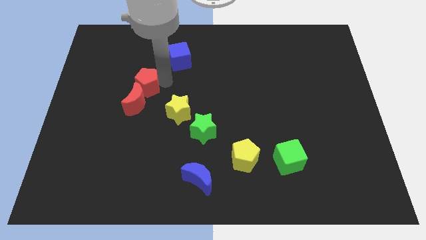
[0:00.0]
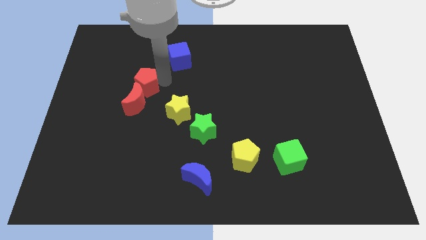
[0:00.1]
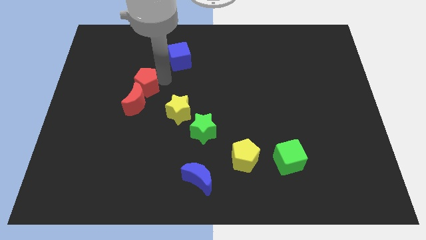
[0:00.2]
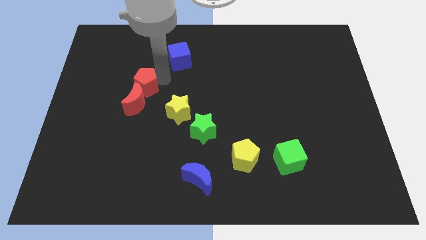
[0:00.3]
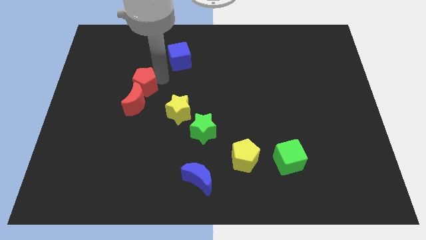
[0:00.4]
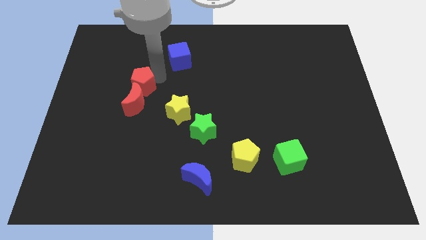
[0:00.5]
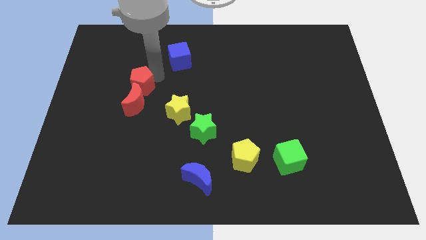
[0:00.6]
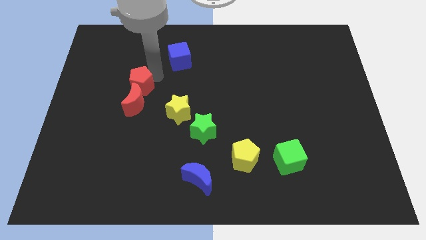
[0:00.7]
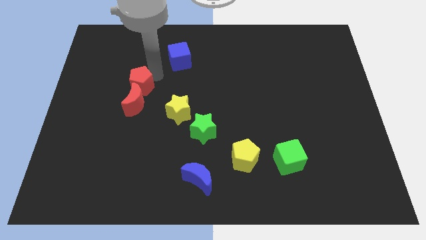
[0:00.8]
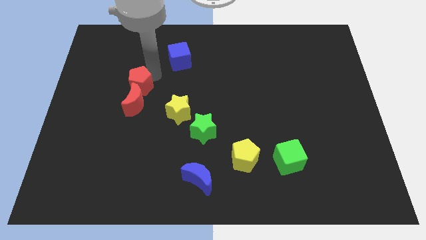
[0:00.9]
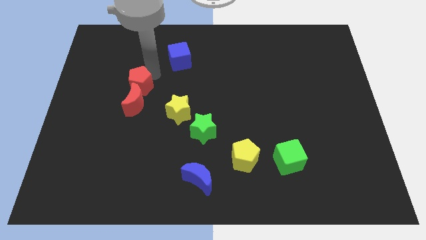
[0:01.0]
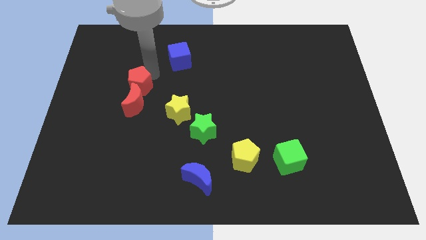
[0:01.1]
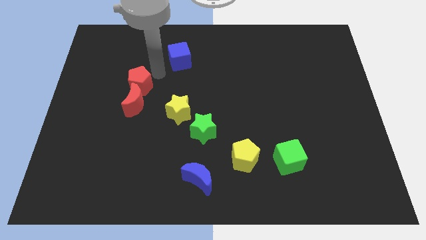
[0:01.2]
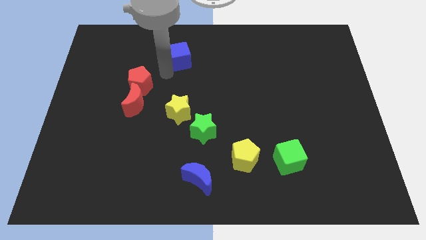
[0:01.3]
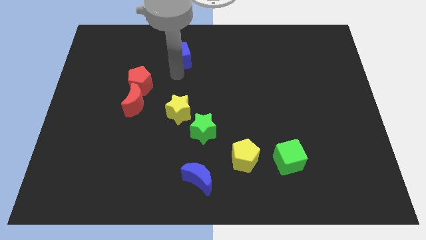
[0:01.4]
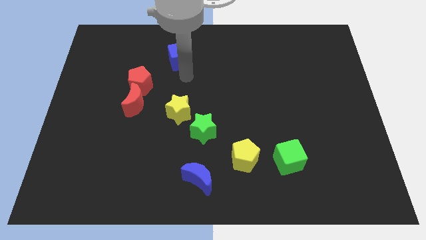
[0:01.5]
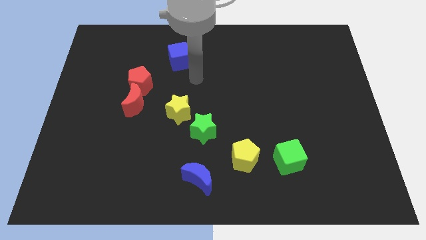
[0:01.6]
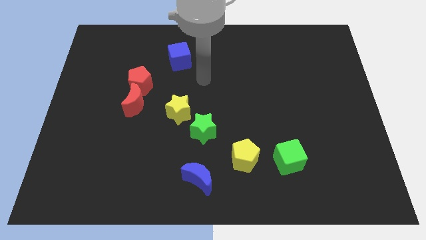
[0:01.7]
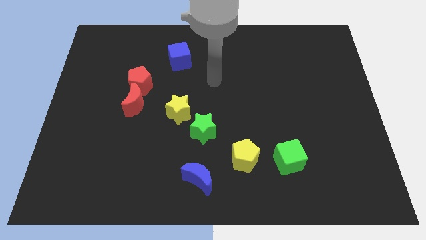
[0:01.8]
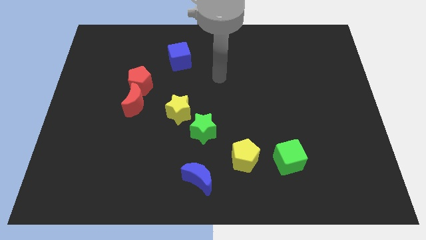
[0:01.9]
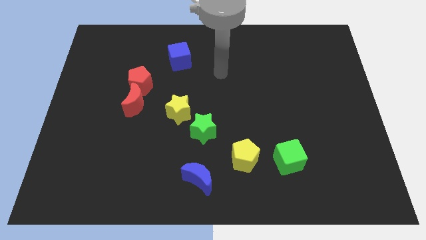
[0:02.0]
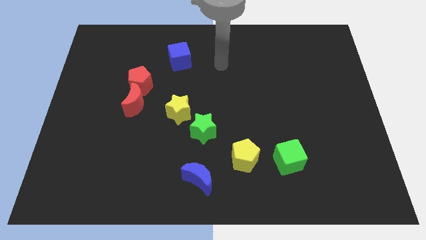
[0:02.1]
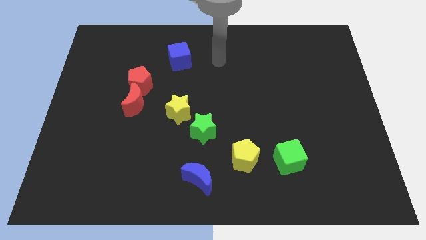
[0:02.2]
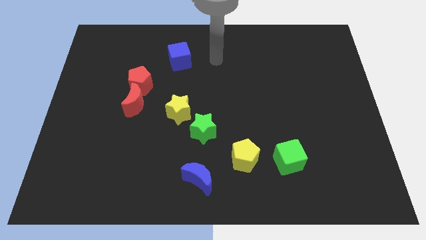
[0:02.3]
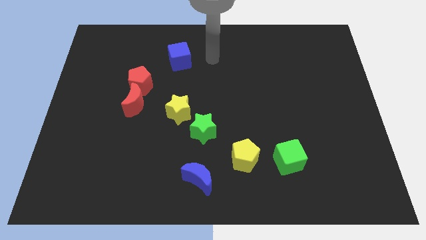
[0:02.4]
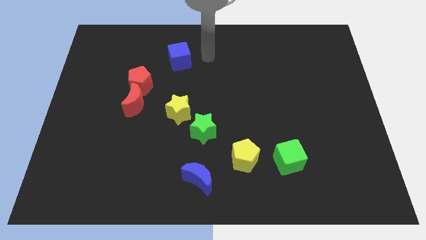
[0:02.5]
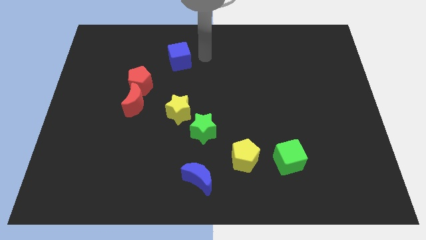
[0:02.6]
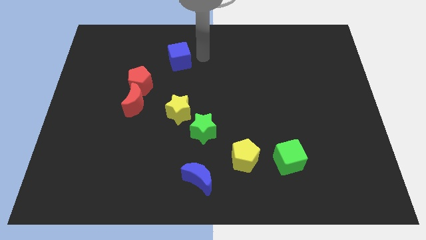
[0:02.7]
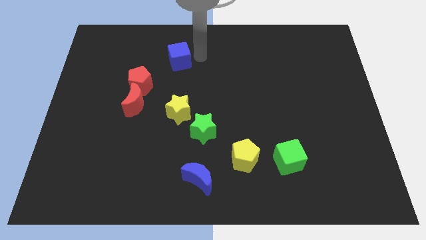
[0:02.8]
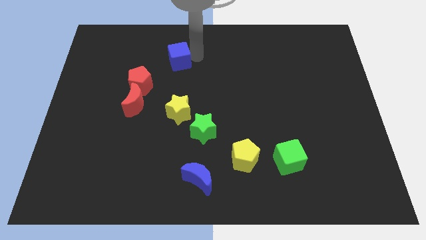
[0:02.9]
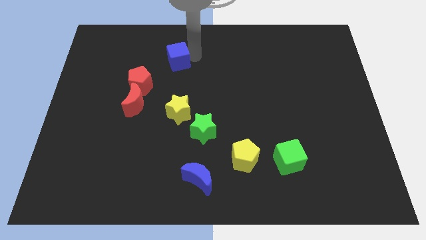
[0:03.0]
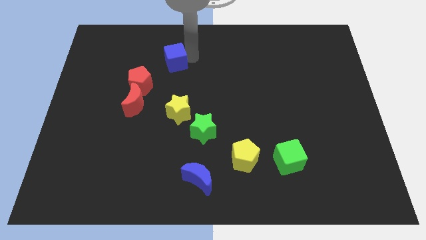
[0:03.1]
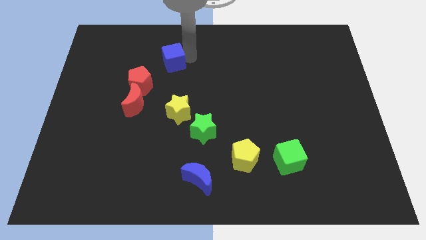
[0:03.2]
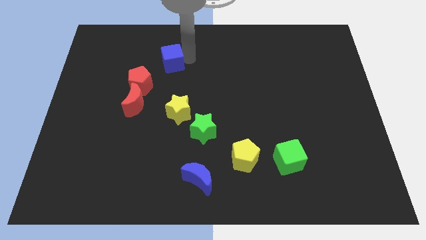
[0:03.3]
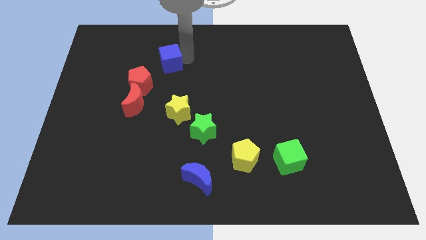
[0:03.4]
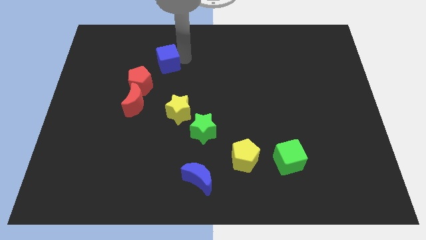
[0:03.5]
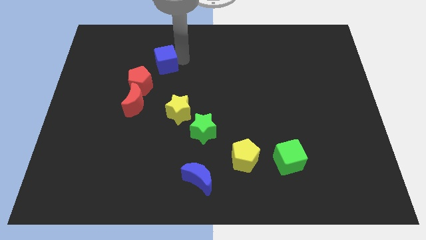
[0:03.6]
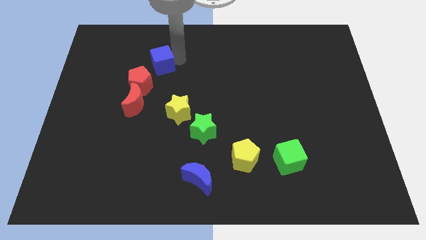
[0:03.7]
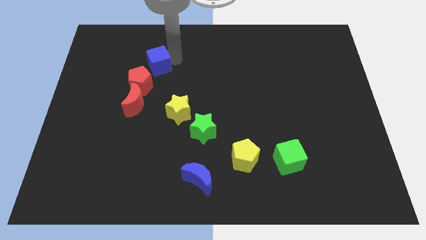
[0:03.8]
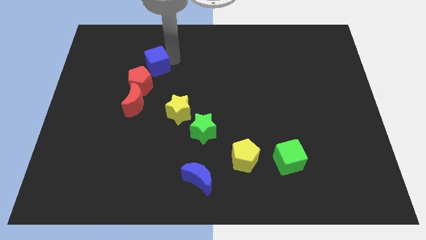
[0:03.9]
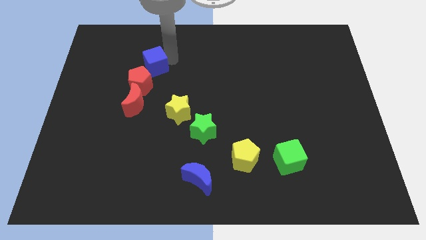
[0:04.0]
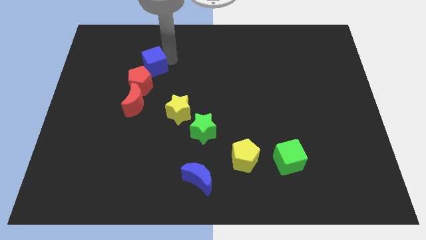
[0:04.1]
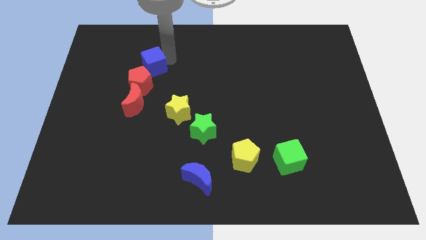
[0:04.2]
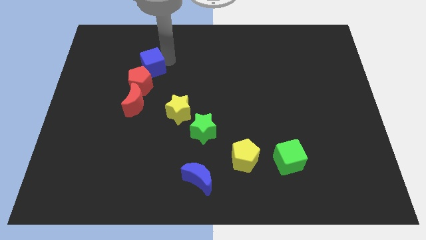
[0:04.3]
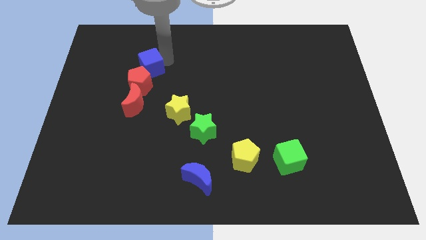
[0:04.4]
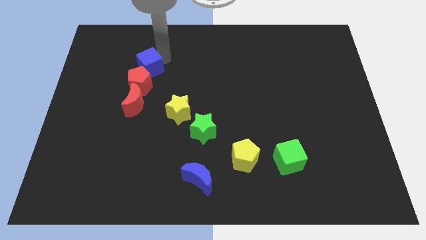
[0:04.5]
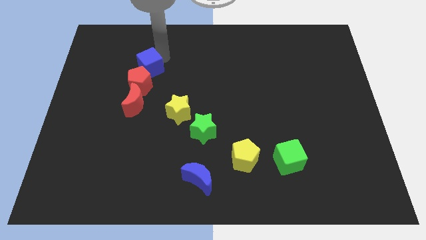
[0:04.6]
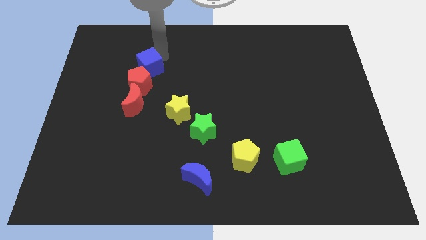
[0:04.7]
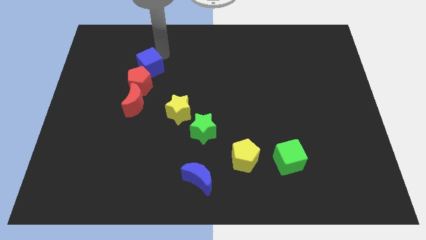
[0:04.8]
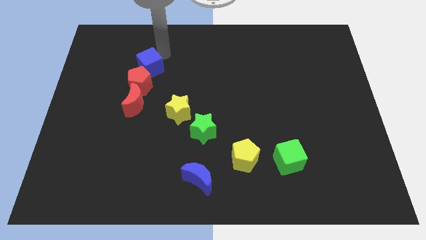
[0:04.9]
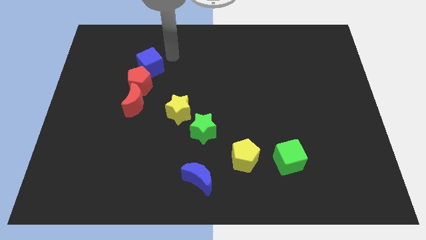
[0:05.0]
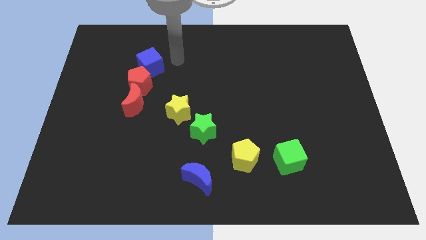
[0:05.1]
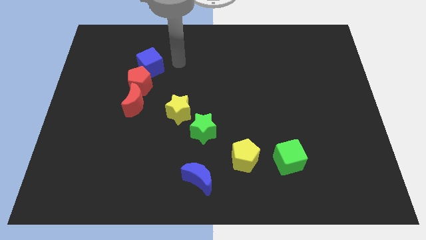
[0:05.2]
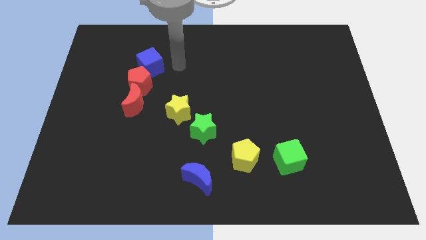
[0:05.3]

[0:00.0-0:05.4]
move the blue cube above the red pentagon

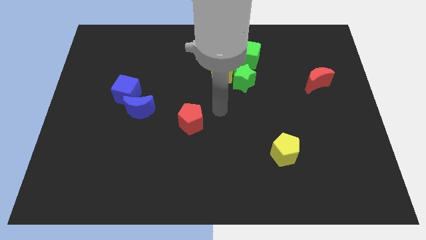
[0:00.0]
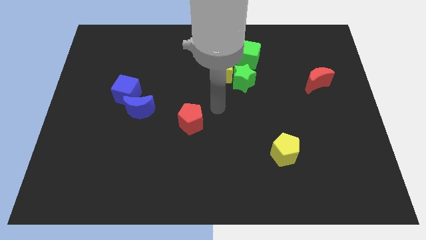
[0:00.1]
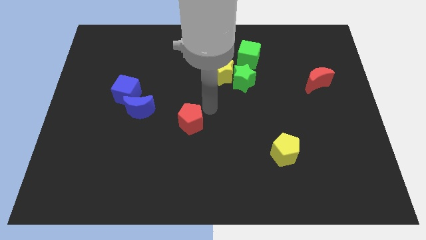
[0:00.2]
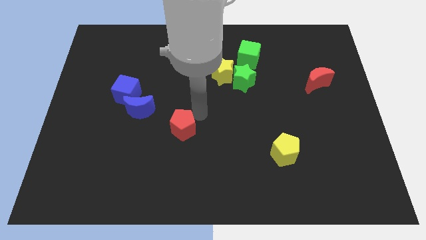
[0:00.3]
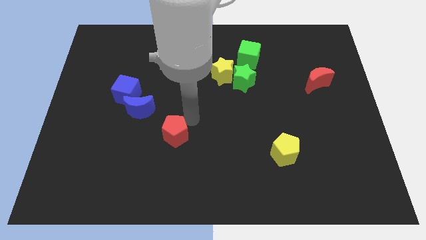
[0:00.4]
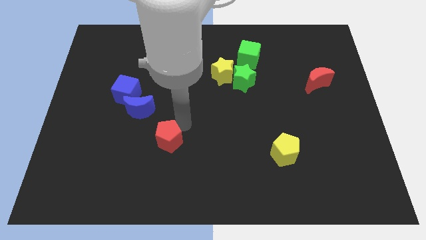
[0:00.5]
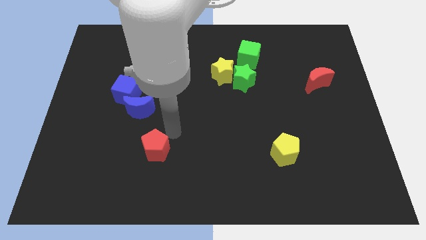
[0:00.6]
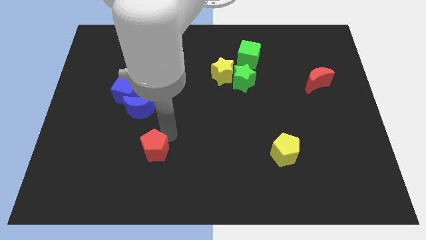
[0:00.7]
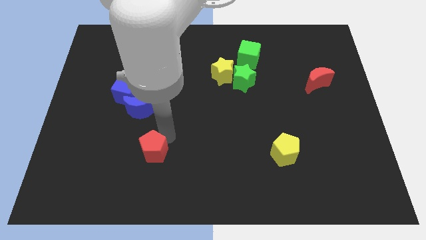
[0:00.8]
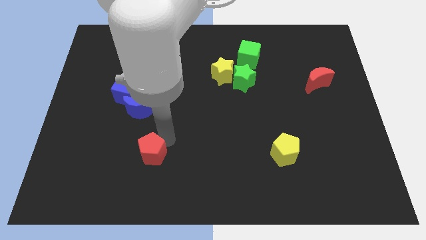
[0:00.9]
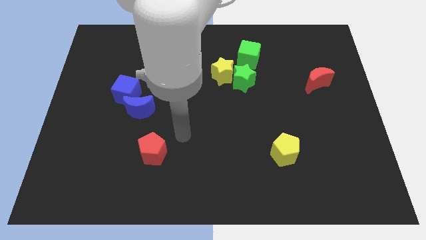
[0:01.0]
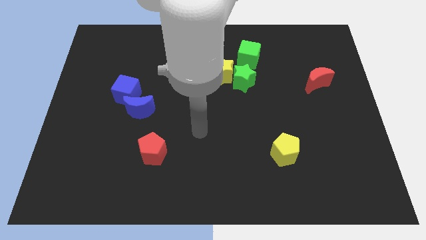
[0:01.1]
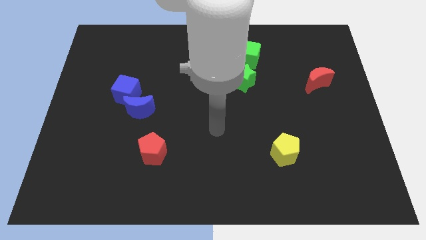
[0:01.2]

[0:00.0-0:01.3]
place the red pentagon parallel to the yellow pentagon

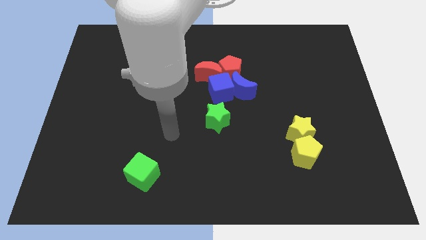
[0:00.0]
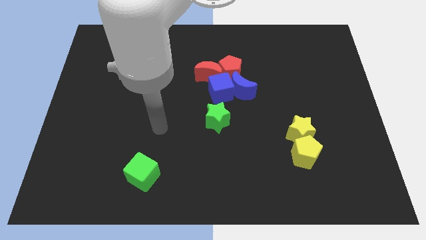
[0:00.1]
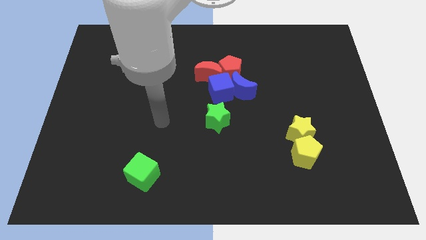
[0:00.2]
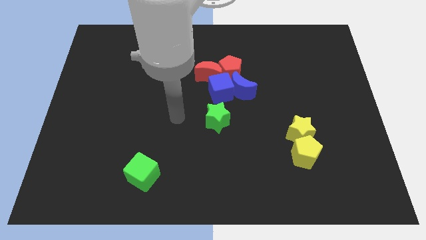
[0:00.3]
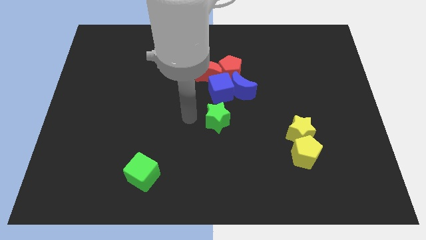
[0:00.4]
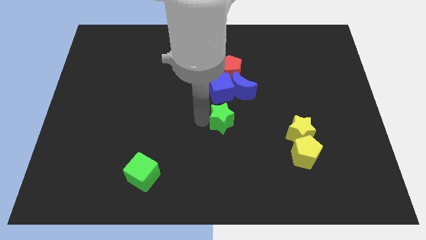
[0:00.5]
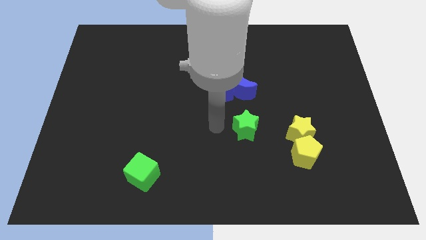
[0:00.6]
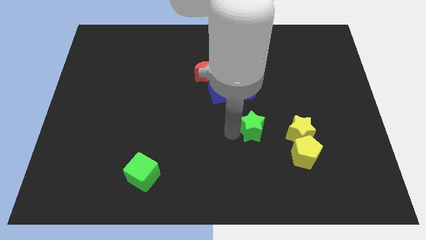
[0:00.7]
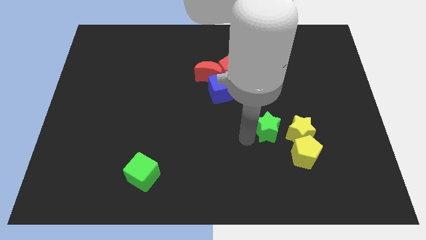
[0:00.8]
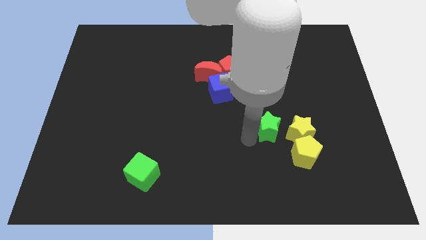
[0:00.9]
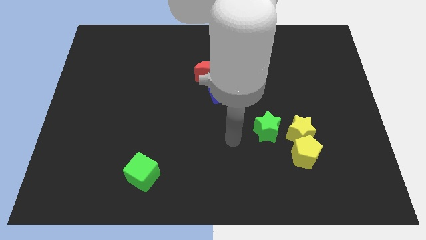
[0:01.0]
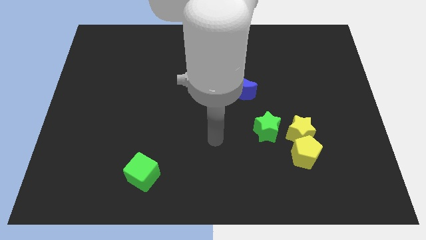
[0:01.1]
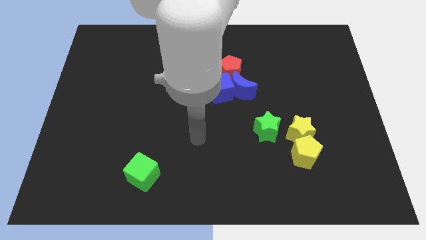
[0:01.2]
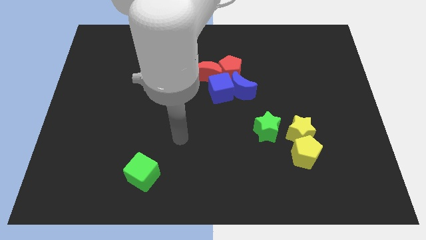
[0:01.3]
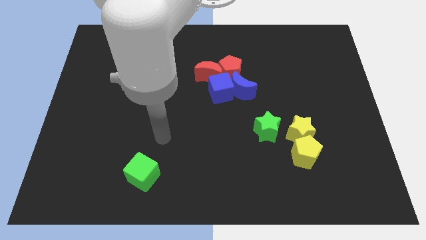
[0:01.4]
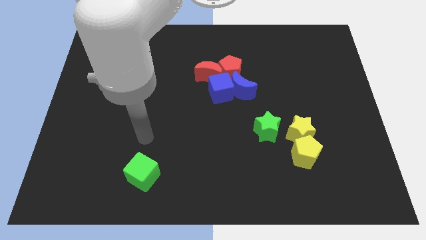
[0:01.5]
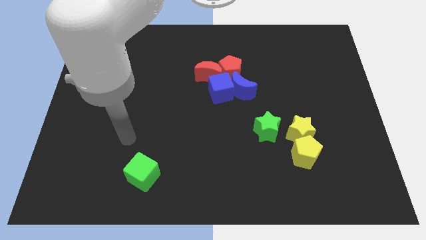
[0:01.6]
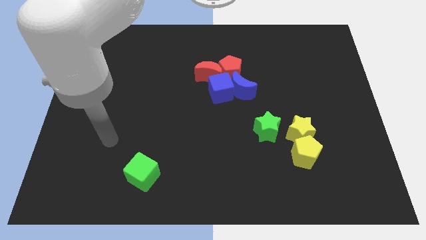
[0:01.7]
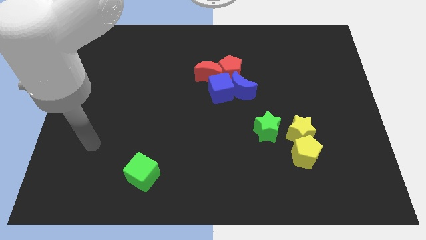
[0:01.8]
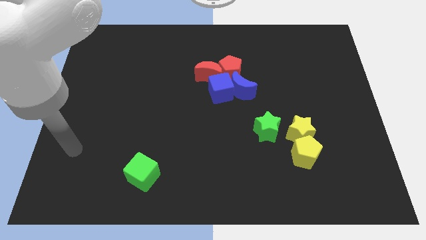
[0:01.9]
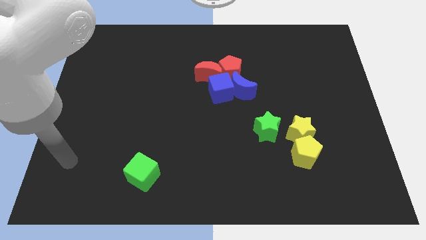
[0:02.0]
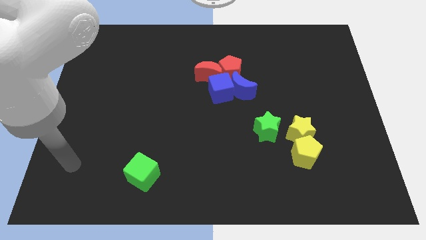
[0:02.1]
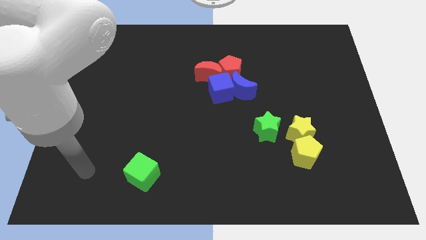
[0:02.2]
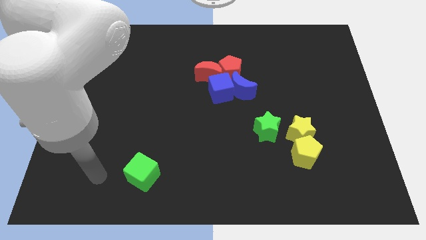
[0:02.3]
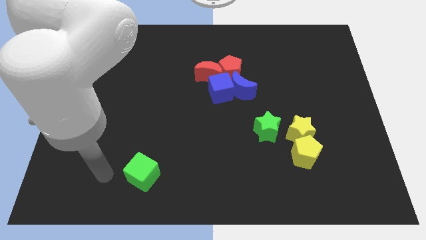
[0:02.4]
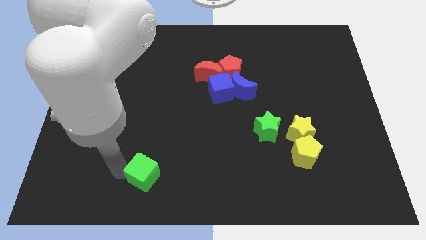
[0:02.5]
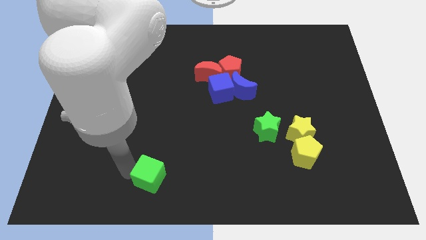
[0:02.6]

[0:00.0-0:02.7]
push the green star to the left of the yellow star
